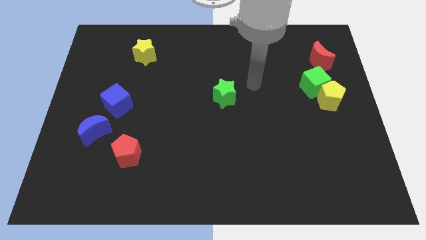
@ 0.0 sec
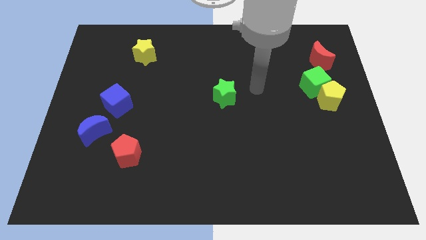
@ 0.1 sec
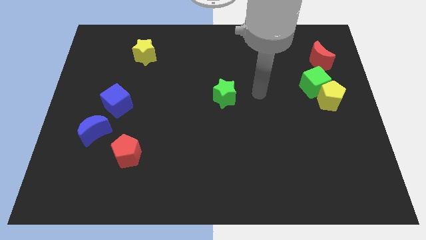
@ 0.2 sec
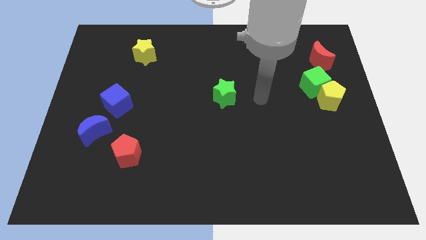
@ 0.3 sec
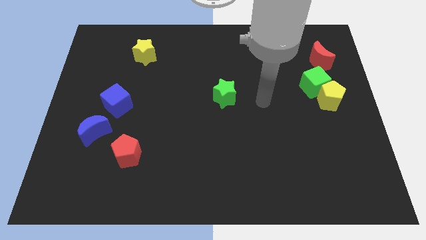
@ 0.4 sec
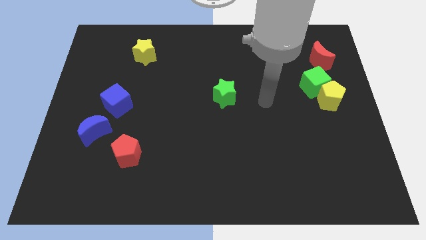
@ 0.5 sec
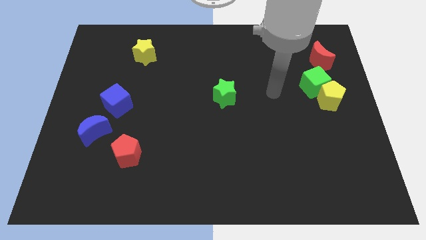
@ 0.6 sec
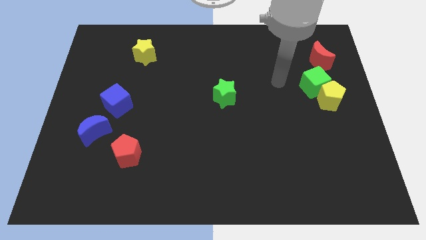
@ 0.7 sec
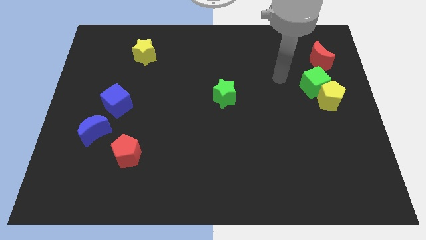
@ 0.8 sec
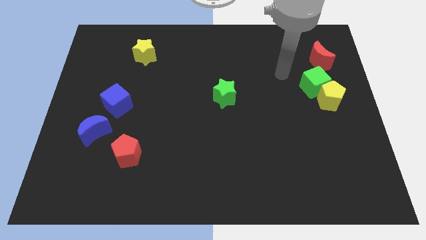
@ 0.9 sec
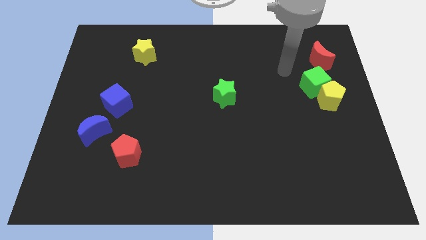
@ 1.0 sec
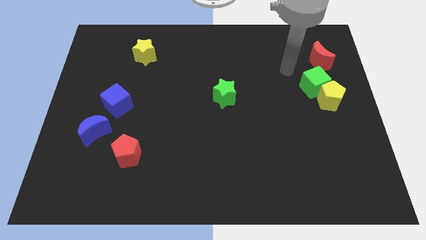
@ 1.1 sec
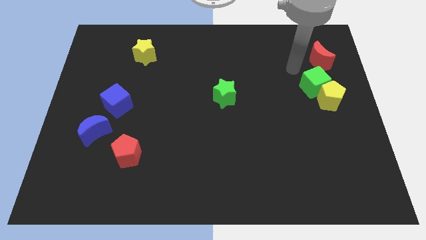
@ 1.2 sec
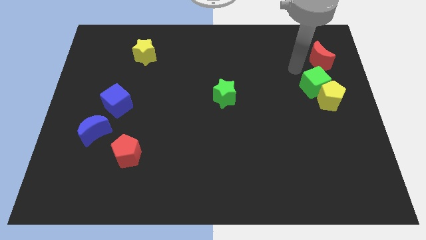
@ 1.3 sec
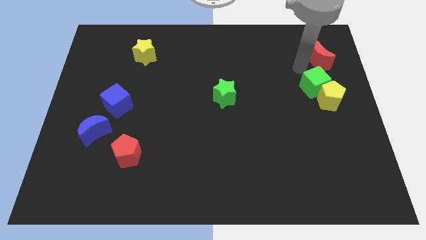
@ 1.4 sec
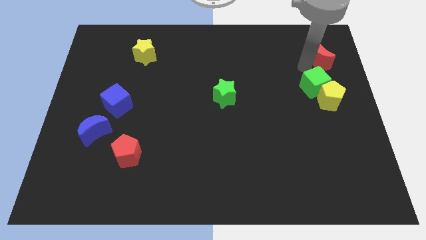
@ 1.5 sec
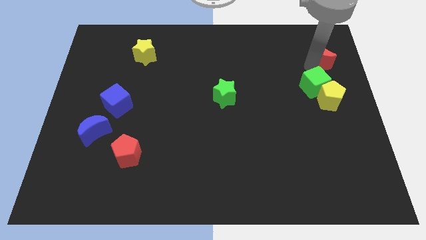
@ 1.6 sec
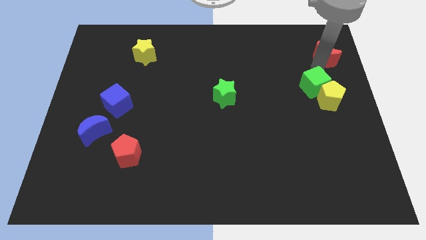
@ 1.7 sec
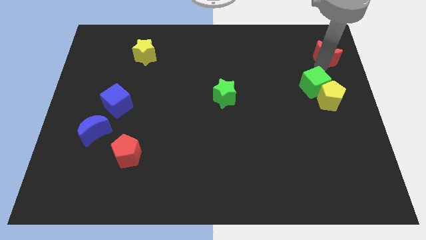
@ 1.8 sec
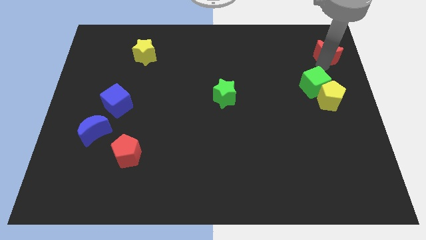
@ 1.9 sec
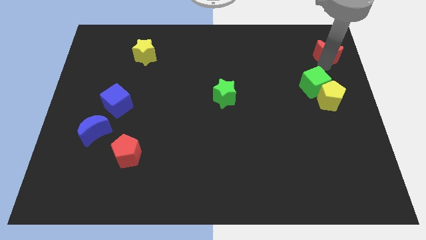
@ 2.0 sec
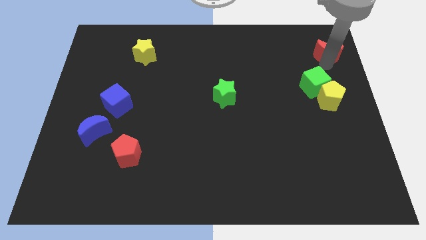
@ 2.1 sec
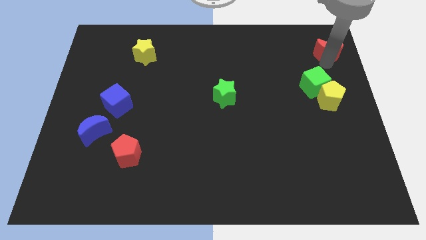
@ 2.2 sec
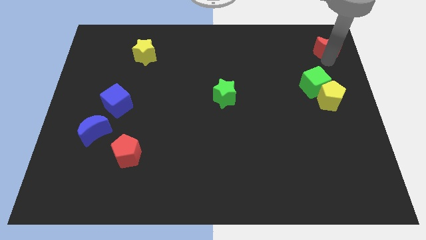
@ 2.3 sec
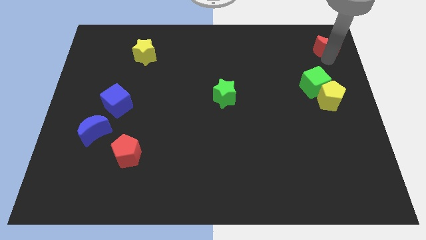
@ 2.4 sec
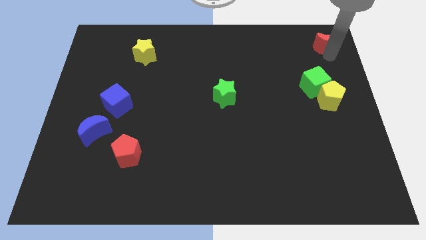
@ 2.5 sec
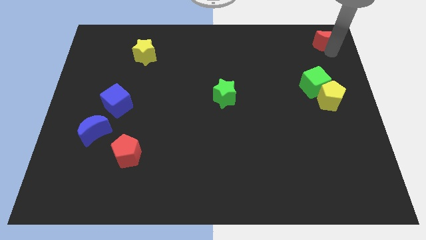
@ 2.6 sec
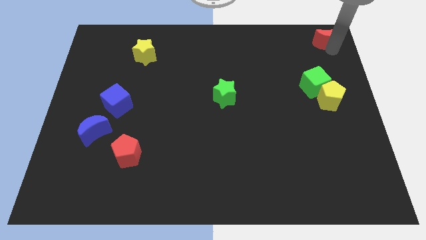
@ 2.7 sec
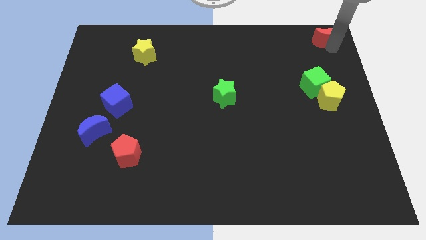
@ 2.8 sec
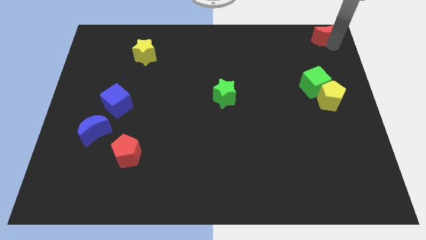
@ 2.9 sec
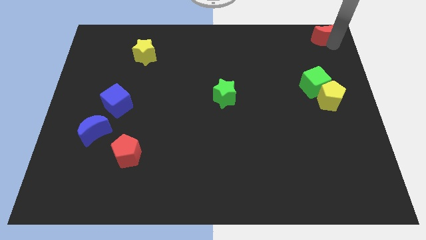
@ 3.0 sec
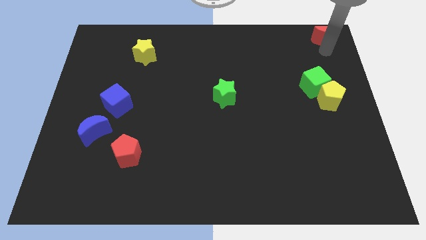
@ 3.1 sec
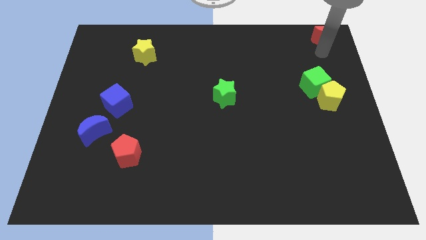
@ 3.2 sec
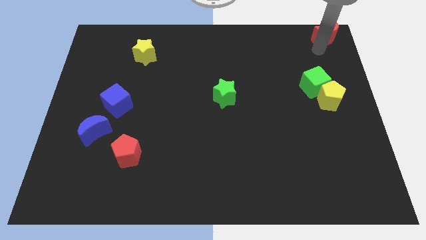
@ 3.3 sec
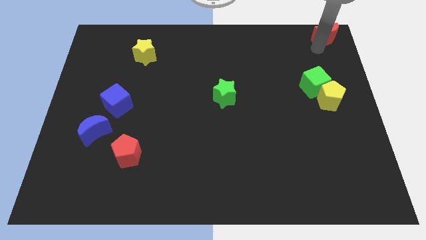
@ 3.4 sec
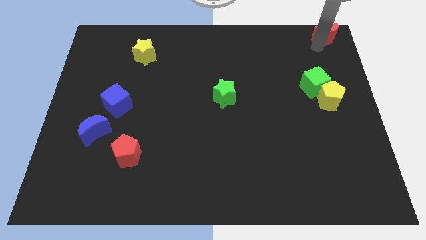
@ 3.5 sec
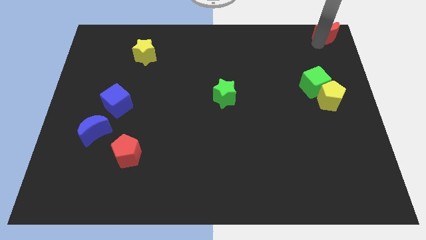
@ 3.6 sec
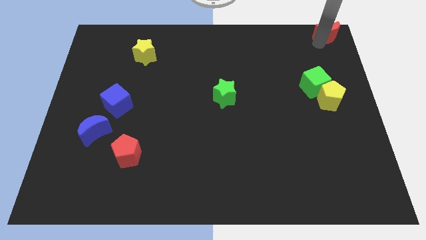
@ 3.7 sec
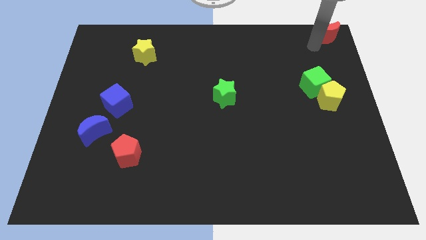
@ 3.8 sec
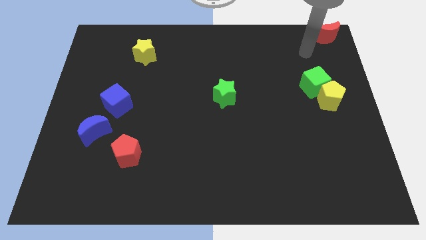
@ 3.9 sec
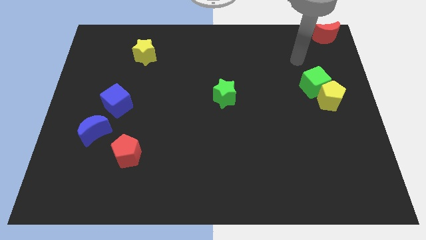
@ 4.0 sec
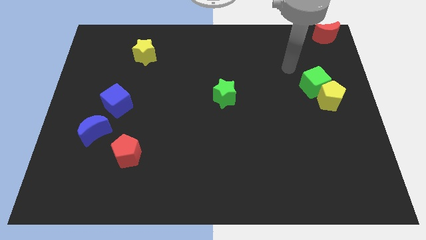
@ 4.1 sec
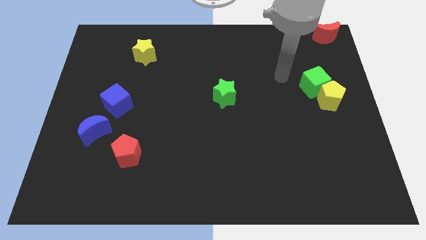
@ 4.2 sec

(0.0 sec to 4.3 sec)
move the red moon to the top right side of the board

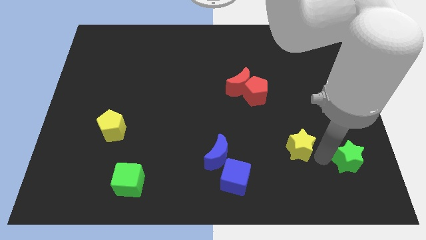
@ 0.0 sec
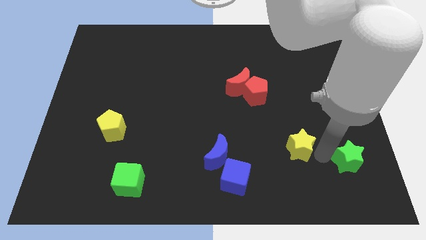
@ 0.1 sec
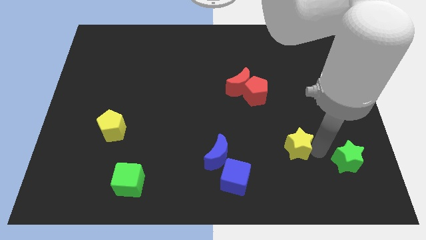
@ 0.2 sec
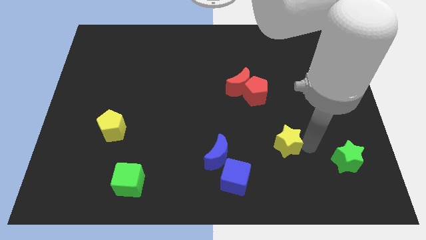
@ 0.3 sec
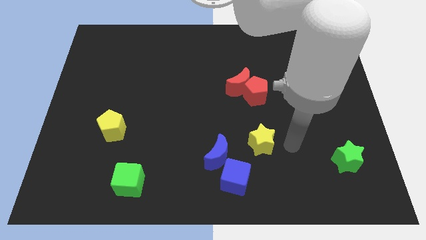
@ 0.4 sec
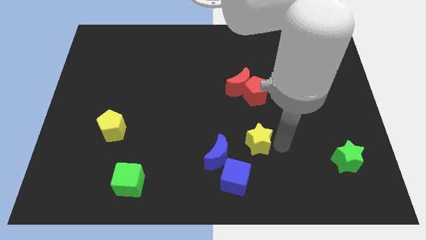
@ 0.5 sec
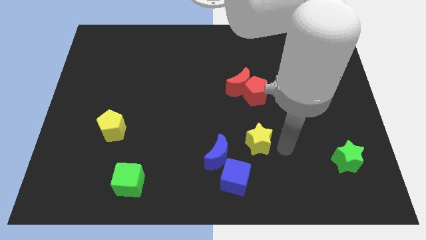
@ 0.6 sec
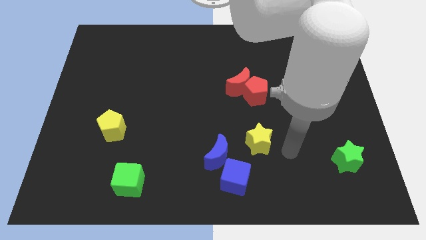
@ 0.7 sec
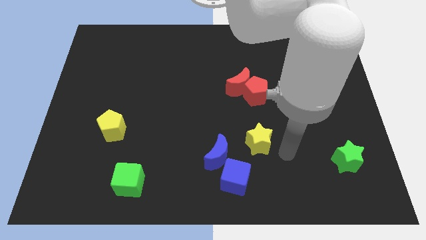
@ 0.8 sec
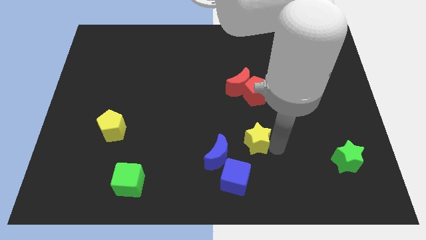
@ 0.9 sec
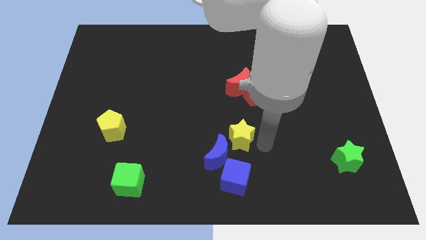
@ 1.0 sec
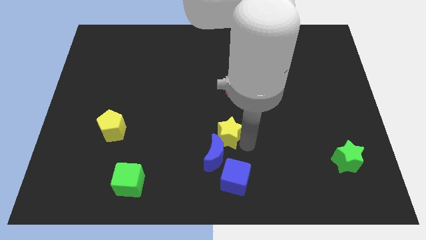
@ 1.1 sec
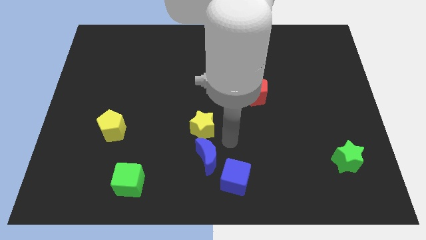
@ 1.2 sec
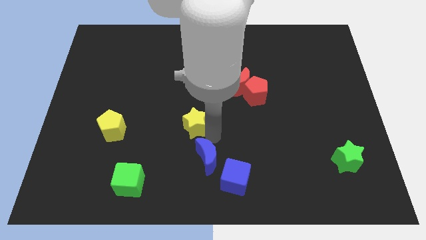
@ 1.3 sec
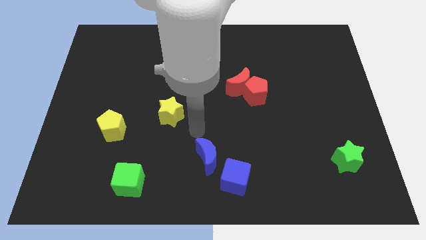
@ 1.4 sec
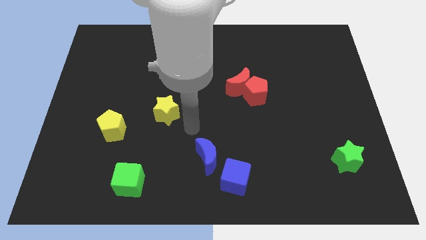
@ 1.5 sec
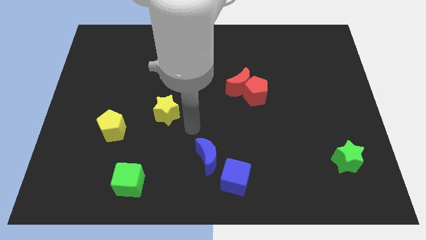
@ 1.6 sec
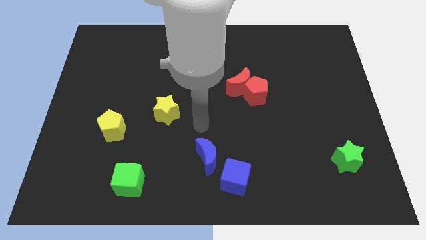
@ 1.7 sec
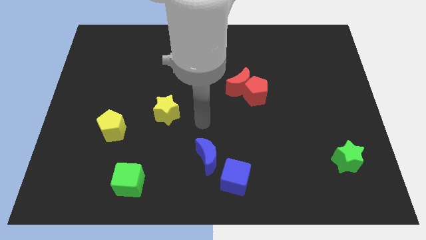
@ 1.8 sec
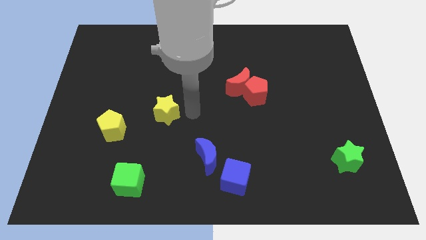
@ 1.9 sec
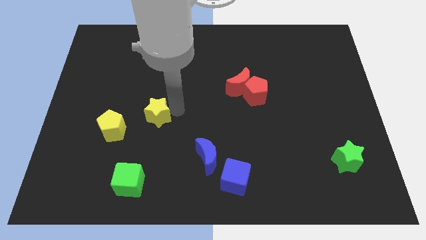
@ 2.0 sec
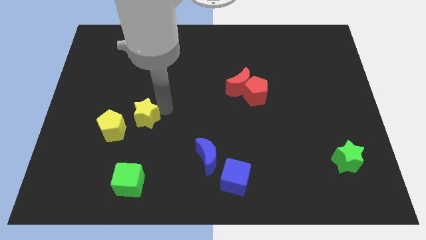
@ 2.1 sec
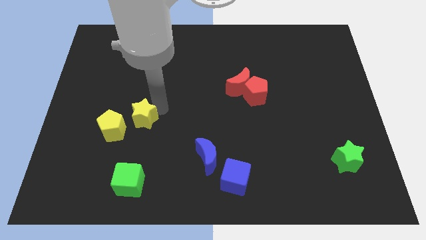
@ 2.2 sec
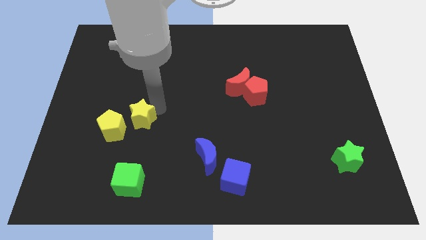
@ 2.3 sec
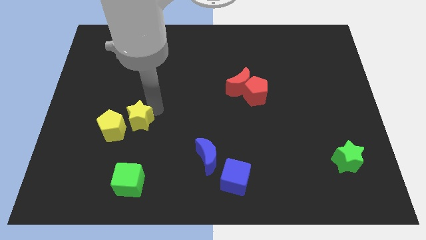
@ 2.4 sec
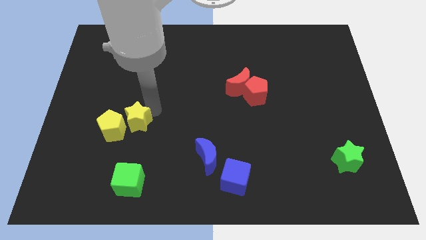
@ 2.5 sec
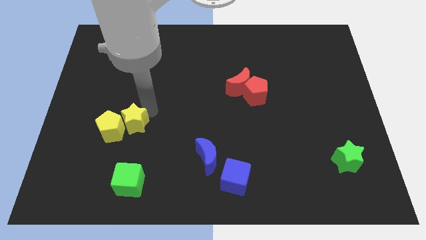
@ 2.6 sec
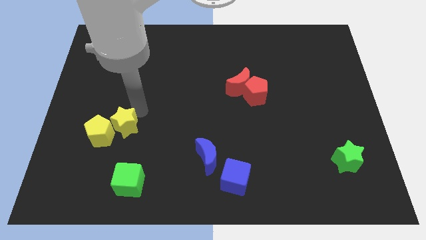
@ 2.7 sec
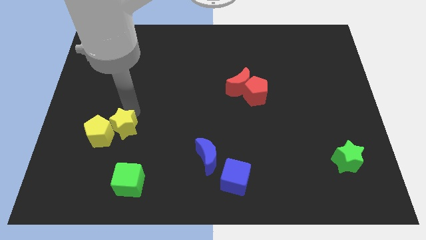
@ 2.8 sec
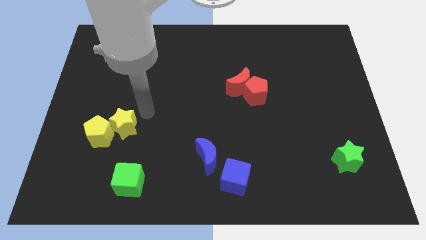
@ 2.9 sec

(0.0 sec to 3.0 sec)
push the yellow star into the yellow pentagon

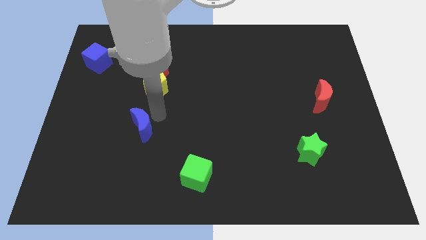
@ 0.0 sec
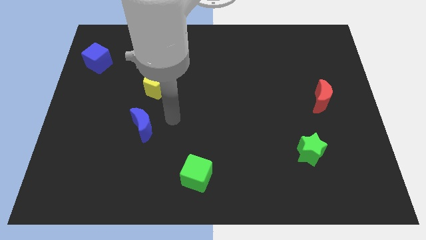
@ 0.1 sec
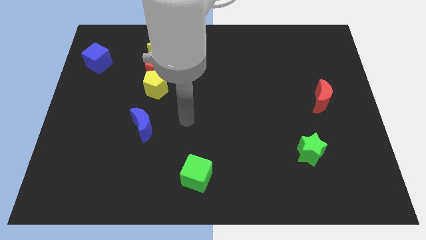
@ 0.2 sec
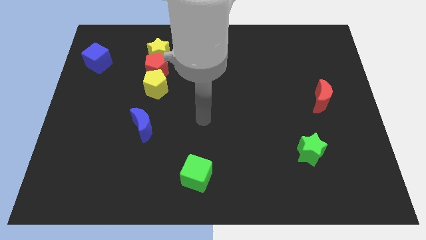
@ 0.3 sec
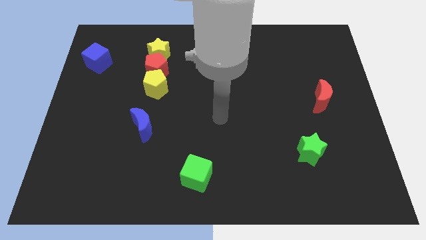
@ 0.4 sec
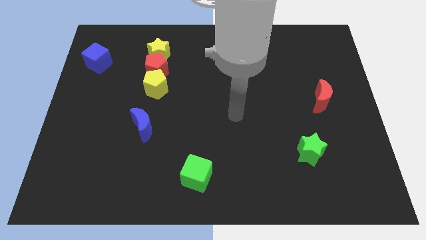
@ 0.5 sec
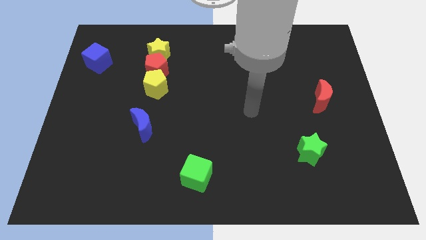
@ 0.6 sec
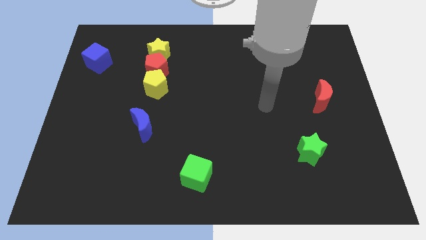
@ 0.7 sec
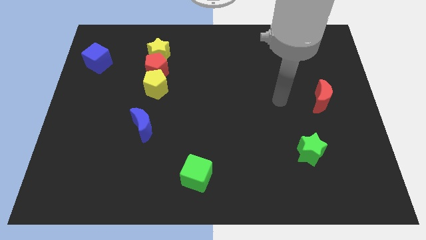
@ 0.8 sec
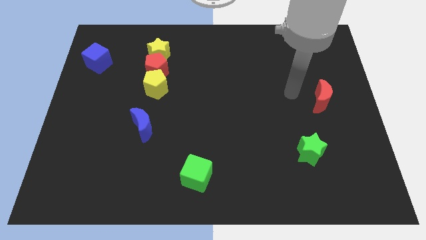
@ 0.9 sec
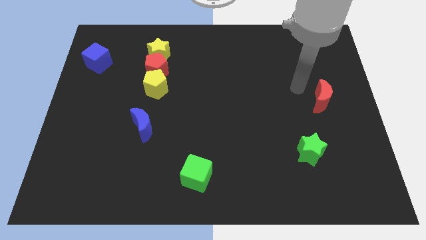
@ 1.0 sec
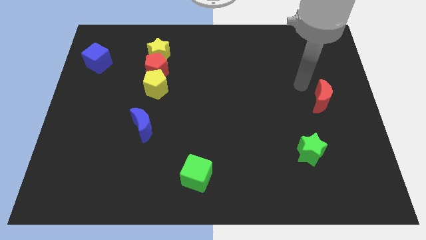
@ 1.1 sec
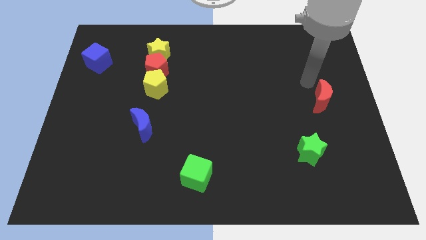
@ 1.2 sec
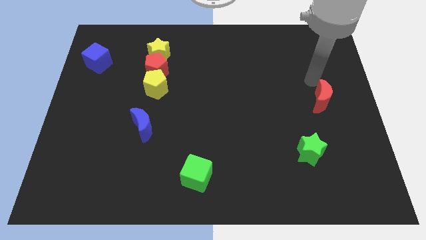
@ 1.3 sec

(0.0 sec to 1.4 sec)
move arm towards red crescent

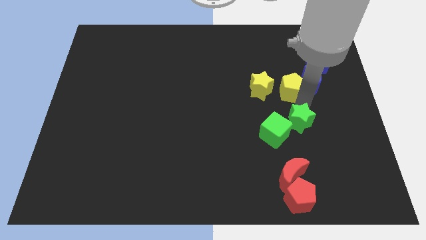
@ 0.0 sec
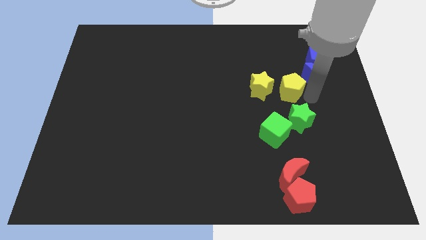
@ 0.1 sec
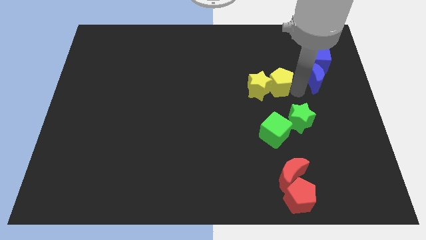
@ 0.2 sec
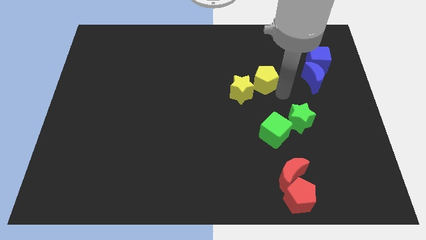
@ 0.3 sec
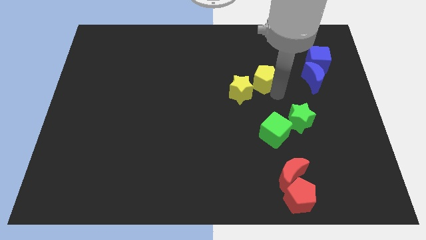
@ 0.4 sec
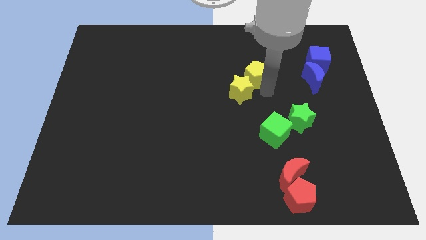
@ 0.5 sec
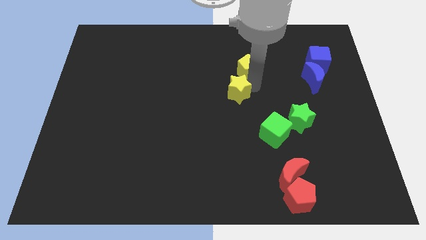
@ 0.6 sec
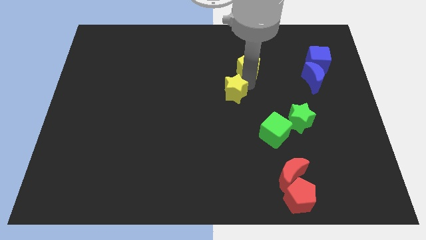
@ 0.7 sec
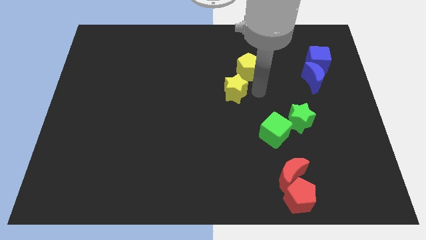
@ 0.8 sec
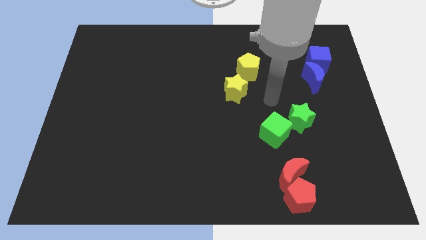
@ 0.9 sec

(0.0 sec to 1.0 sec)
push the yellow blocks away from the blue blocks
